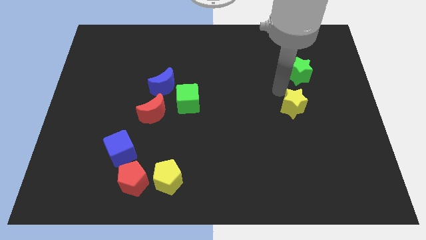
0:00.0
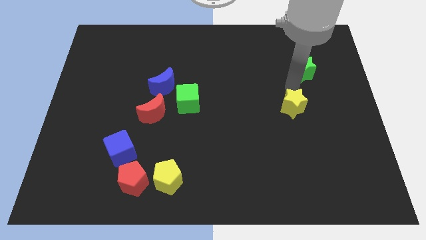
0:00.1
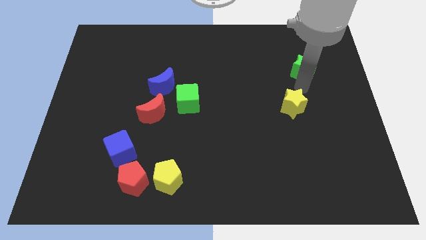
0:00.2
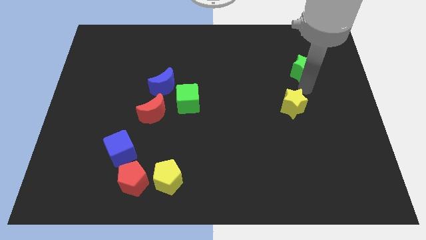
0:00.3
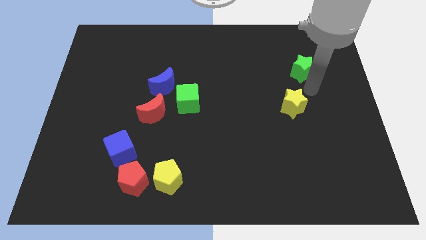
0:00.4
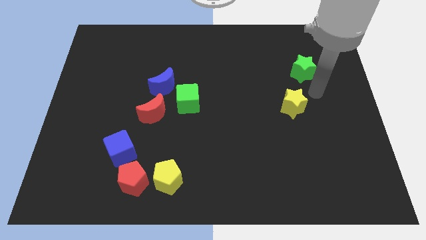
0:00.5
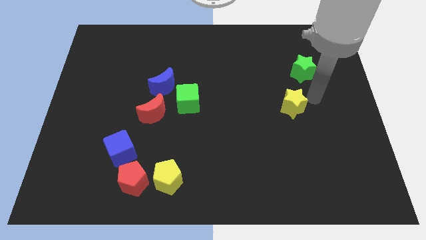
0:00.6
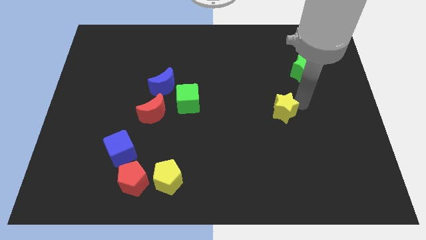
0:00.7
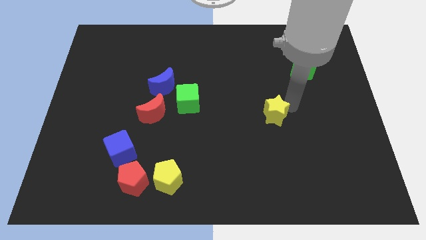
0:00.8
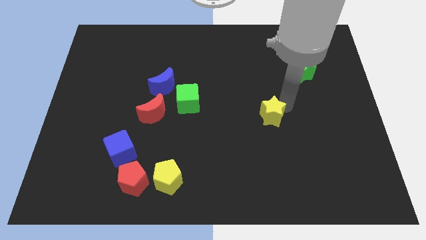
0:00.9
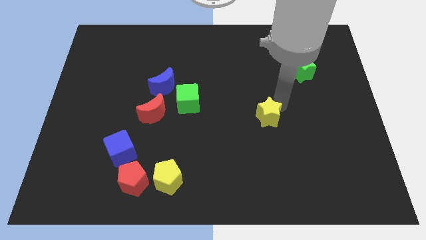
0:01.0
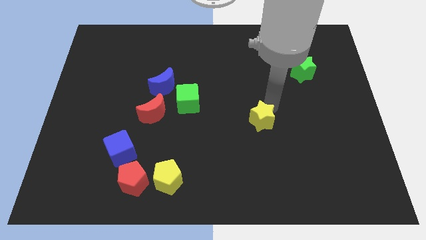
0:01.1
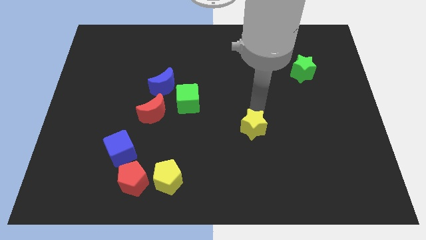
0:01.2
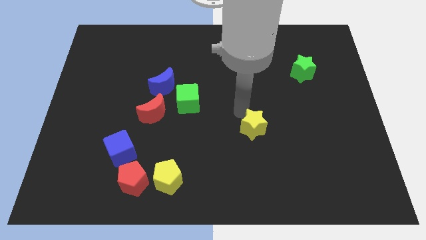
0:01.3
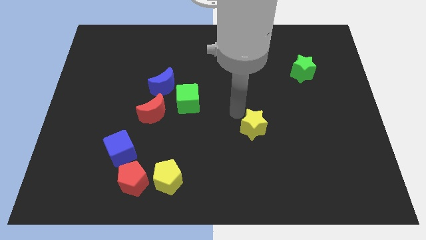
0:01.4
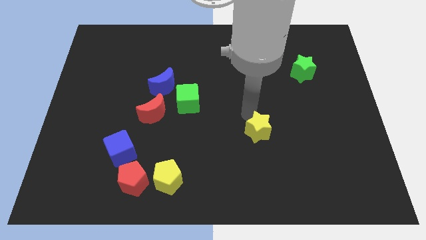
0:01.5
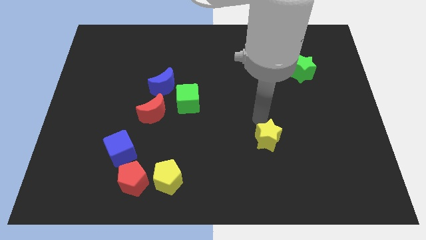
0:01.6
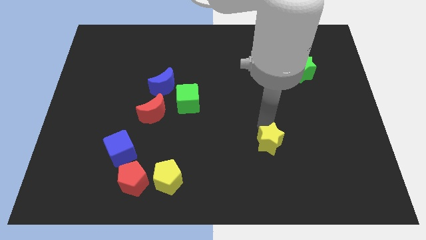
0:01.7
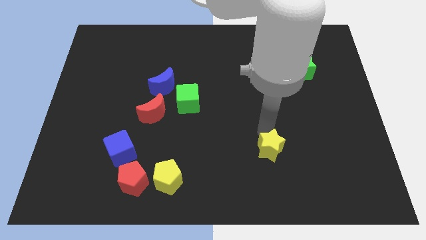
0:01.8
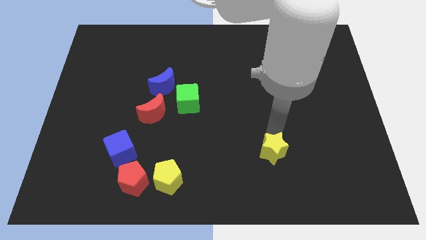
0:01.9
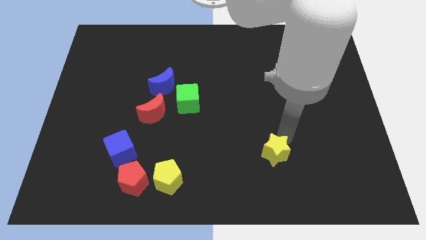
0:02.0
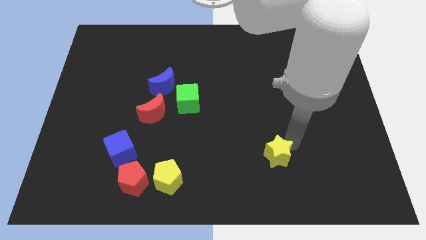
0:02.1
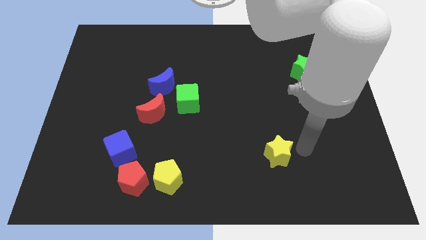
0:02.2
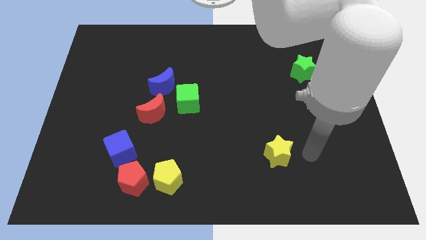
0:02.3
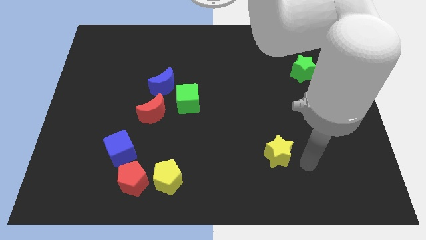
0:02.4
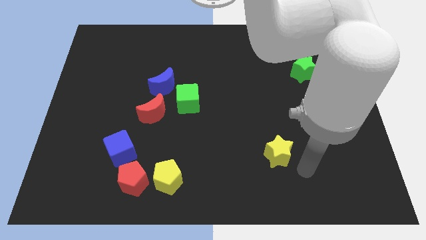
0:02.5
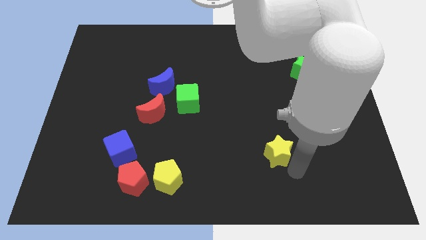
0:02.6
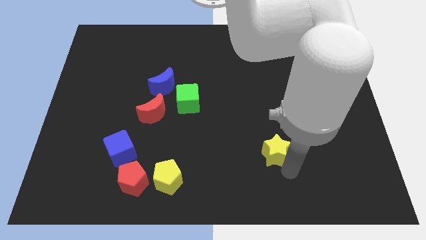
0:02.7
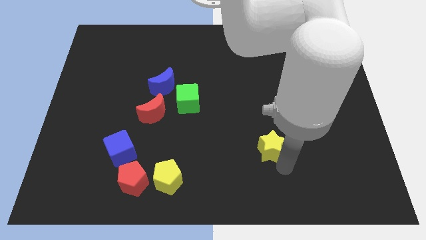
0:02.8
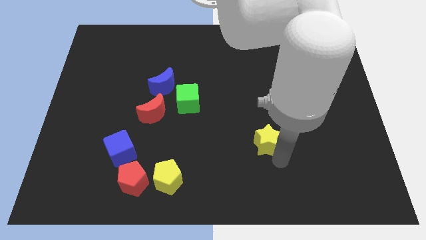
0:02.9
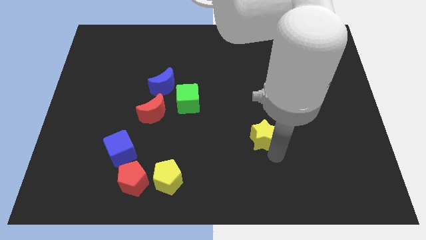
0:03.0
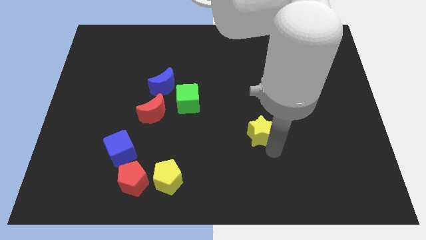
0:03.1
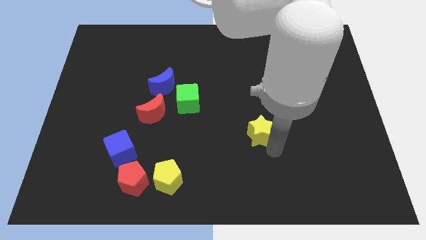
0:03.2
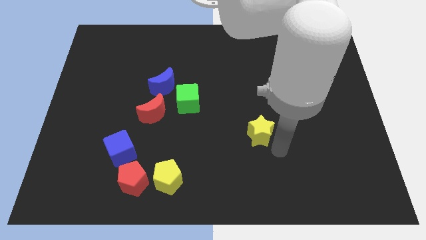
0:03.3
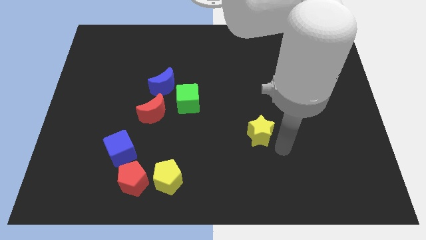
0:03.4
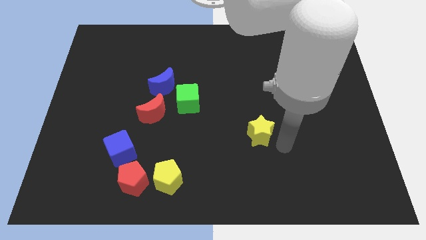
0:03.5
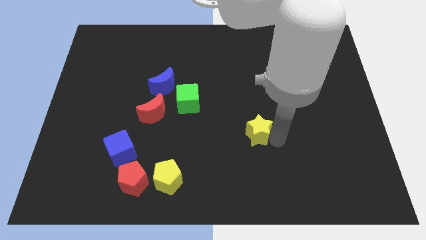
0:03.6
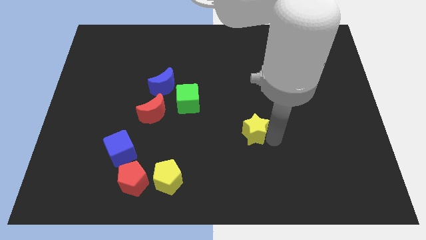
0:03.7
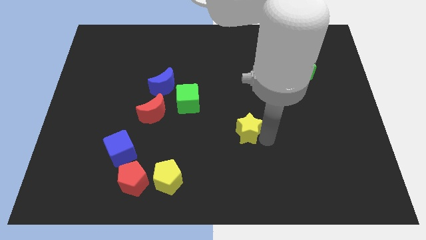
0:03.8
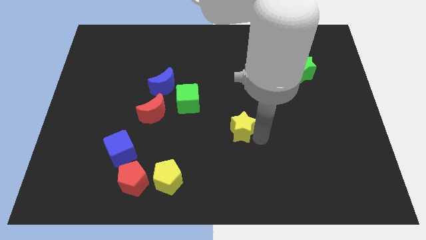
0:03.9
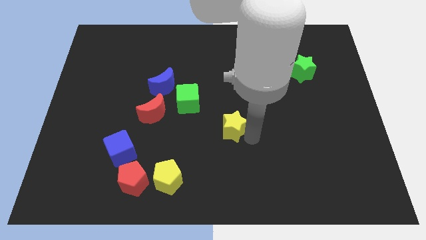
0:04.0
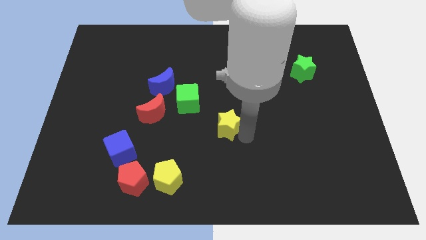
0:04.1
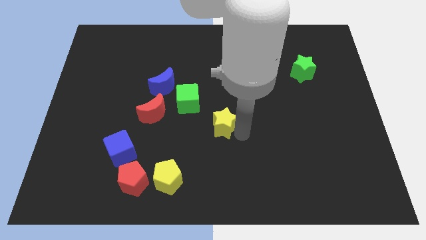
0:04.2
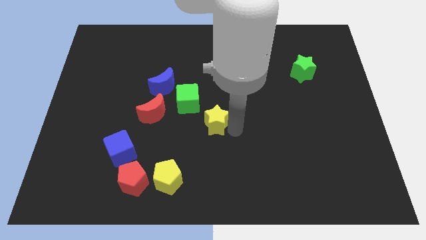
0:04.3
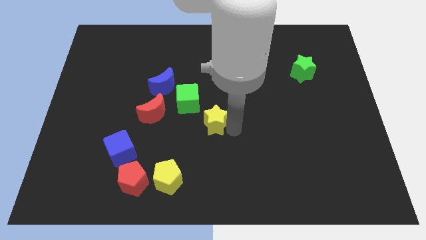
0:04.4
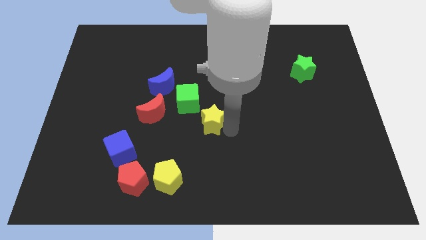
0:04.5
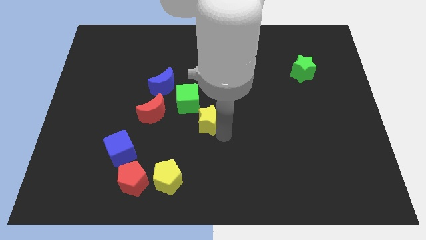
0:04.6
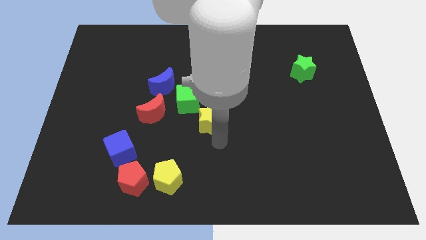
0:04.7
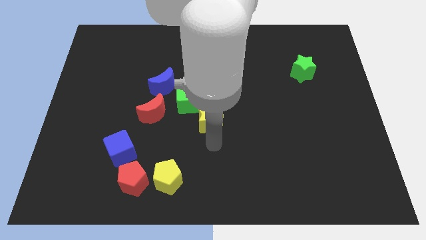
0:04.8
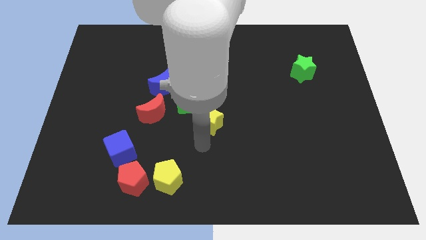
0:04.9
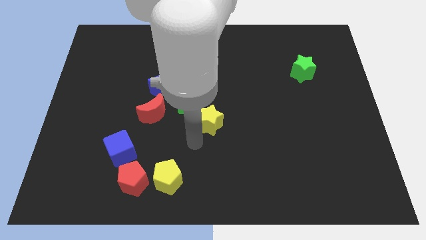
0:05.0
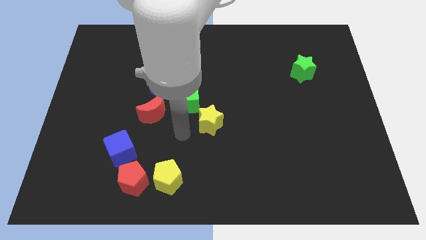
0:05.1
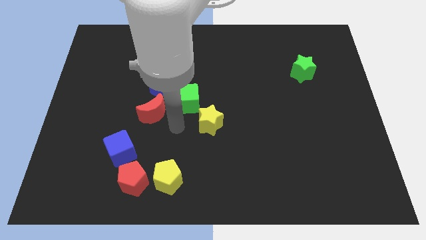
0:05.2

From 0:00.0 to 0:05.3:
move the yellow star towards the center of the board

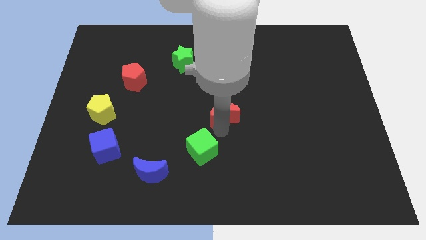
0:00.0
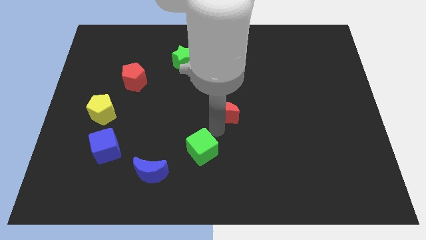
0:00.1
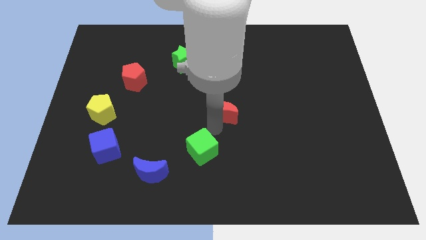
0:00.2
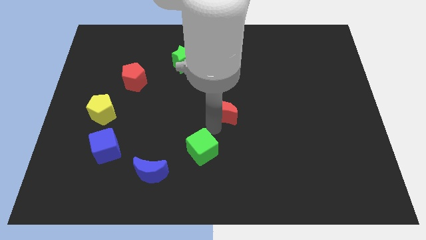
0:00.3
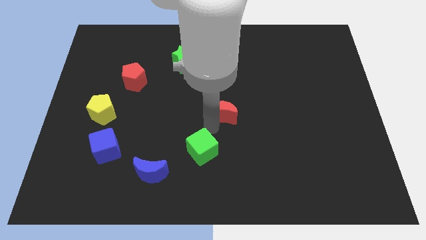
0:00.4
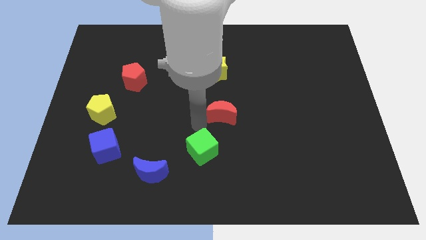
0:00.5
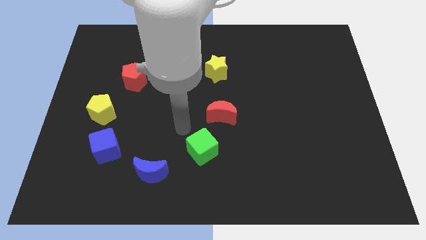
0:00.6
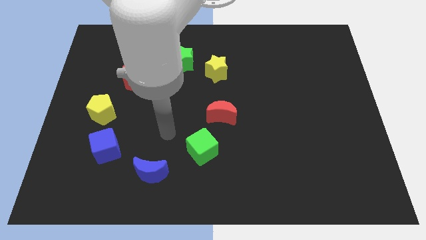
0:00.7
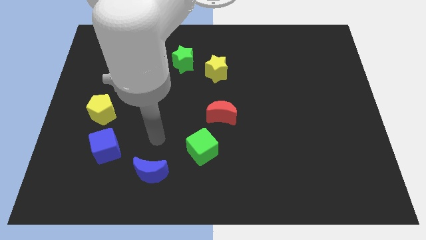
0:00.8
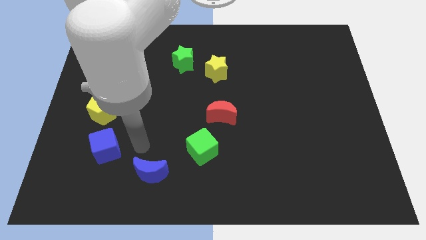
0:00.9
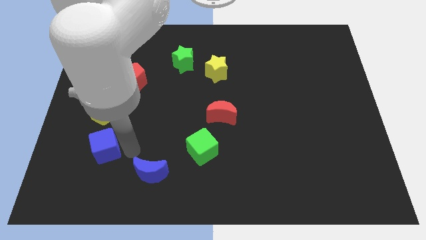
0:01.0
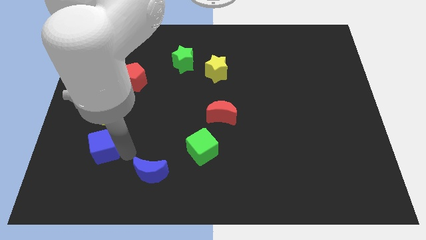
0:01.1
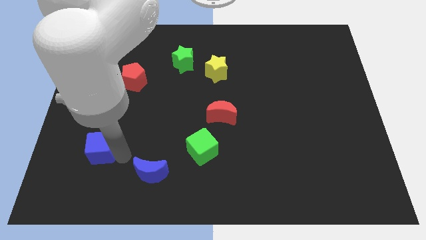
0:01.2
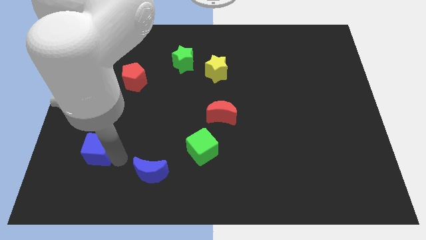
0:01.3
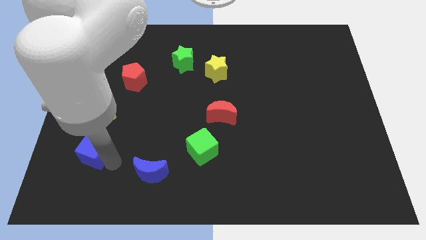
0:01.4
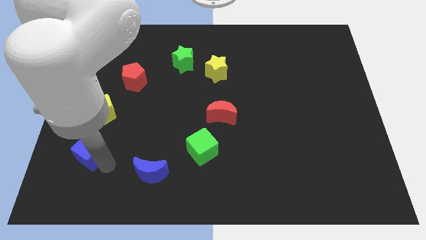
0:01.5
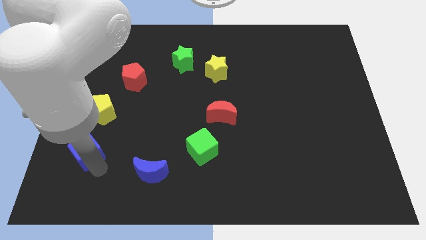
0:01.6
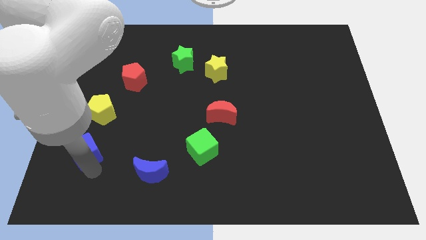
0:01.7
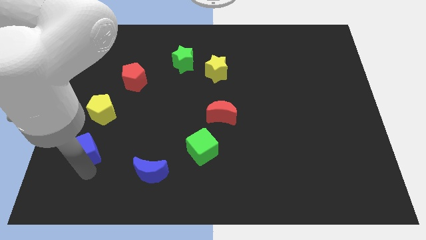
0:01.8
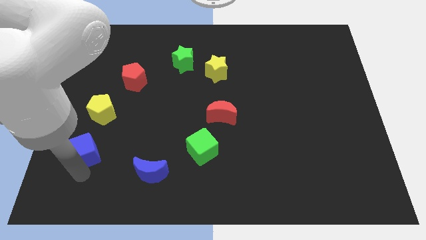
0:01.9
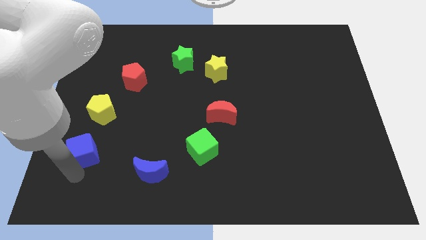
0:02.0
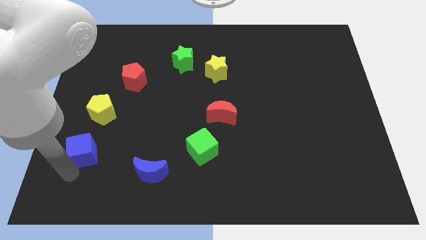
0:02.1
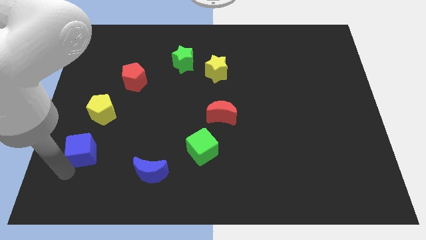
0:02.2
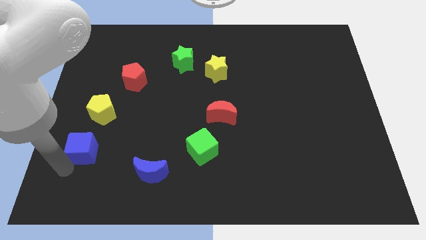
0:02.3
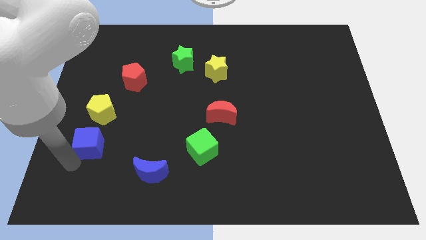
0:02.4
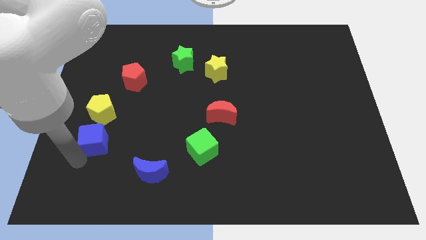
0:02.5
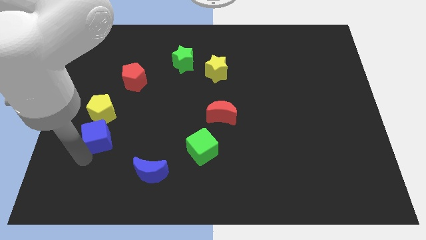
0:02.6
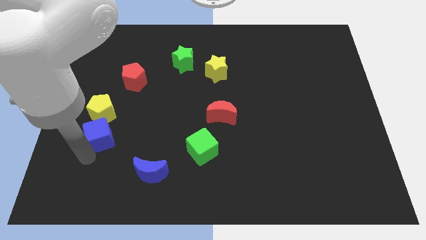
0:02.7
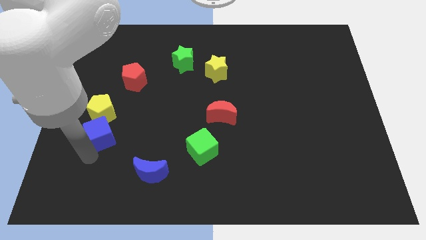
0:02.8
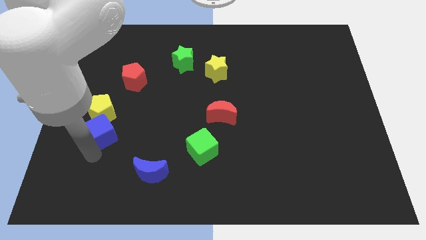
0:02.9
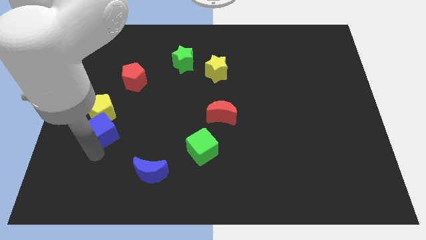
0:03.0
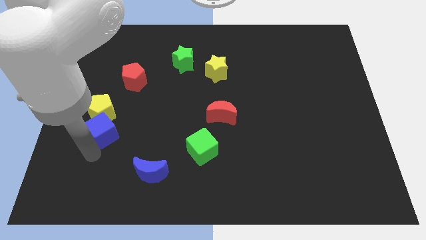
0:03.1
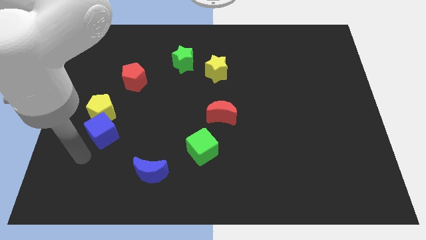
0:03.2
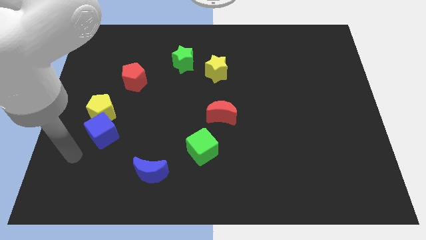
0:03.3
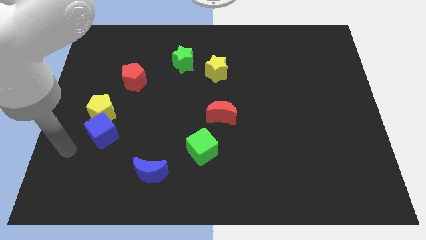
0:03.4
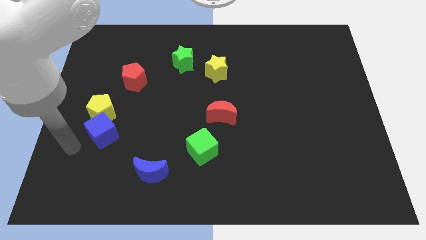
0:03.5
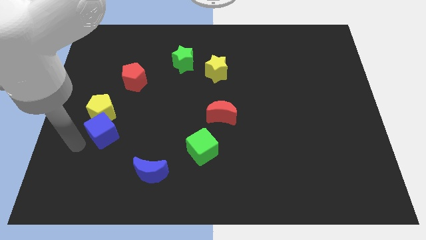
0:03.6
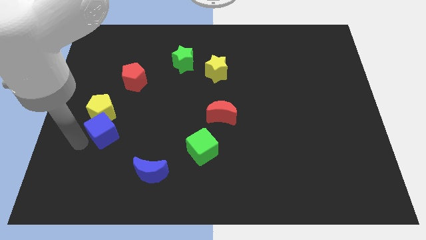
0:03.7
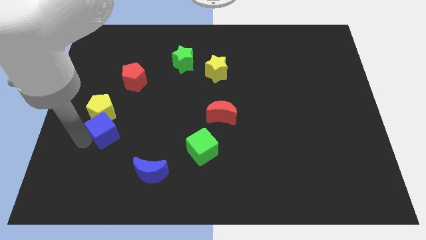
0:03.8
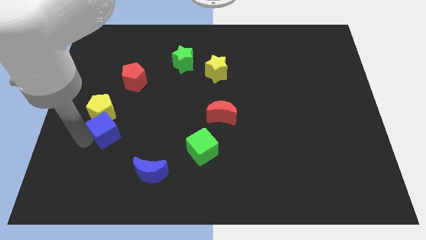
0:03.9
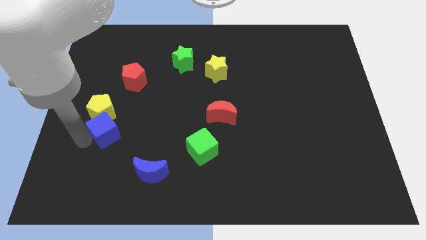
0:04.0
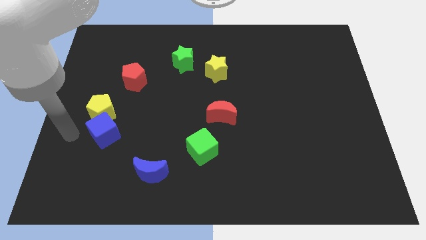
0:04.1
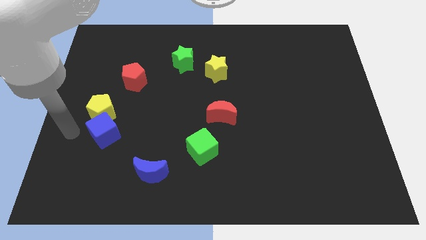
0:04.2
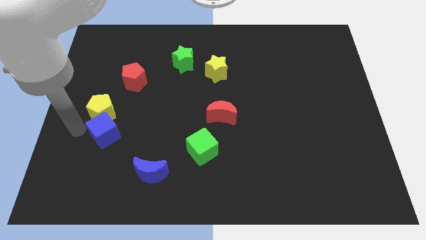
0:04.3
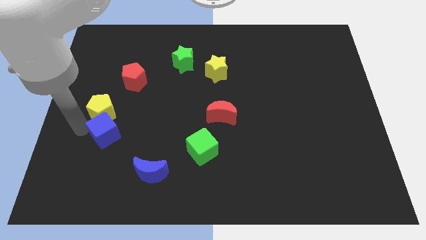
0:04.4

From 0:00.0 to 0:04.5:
place blue cube below yellow pentagon
